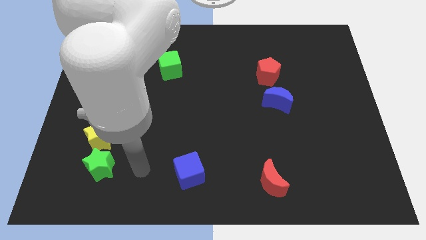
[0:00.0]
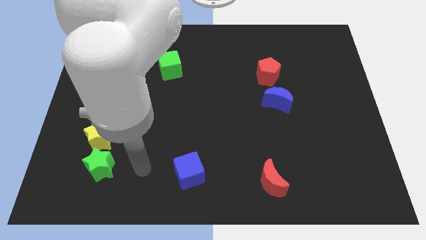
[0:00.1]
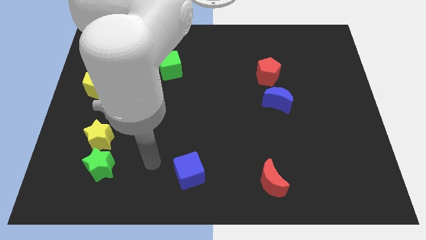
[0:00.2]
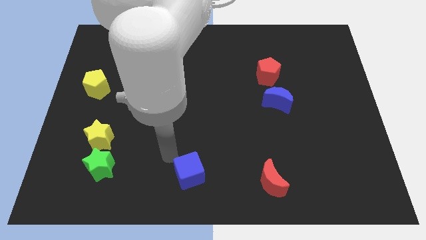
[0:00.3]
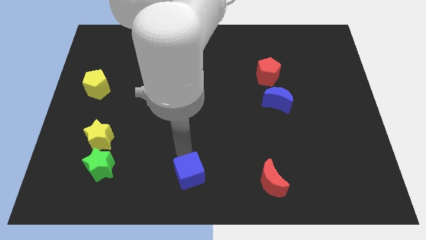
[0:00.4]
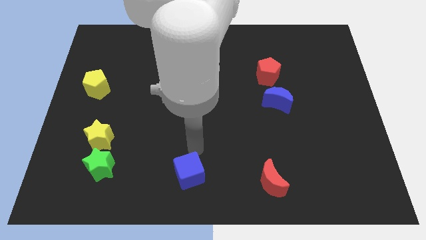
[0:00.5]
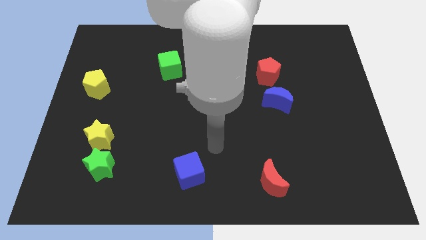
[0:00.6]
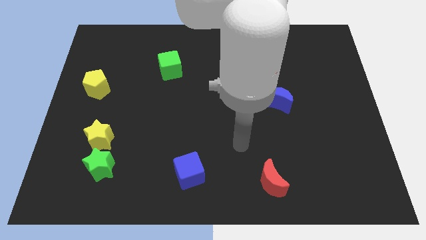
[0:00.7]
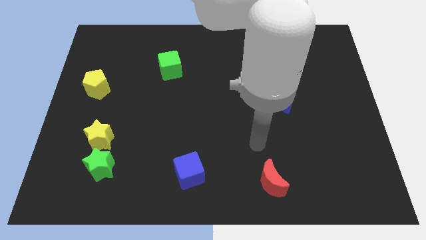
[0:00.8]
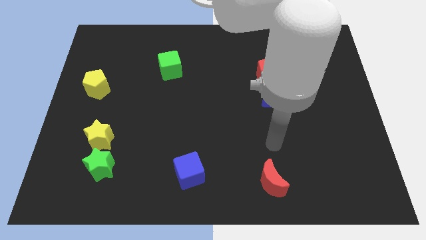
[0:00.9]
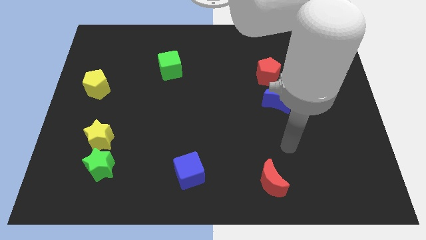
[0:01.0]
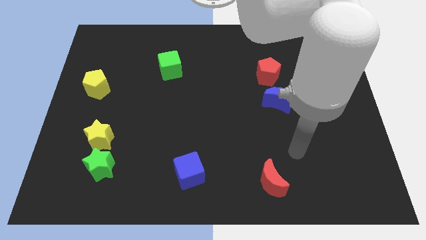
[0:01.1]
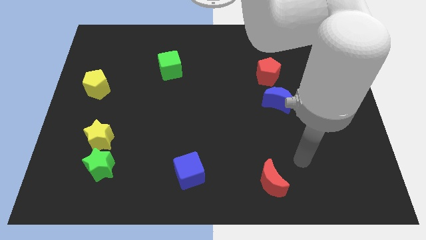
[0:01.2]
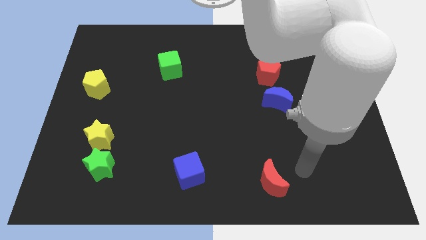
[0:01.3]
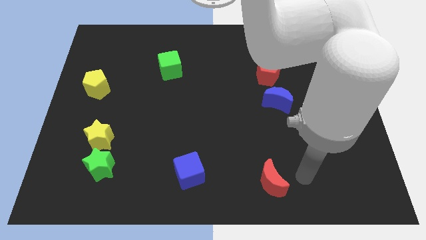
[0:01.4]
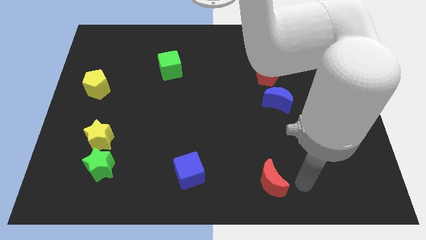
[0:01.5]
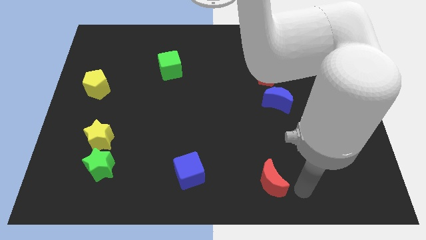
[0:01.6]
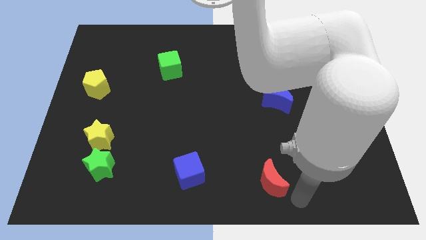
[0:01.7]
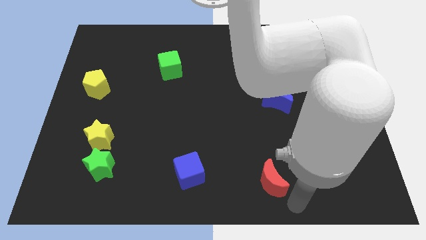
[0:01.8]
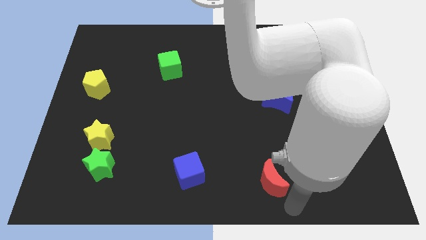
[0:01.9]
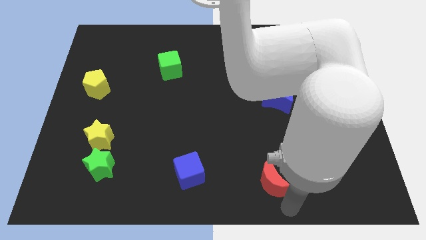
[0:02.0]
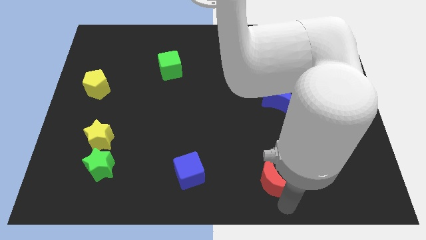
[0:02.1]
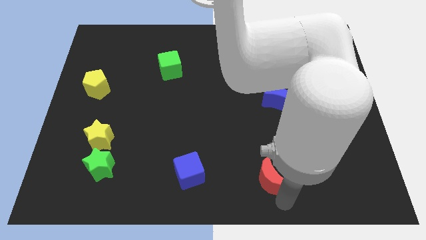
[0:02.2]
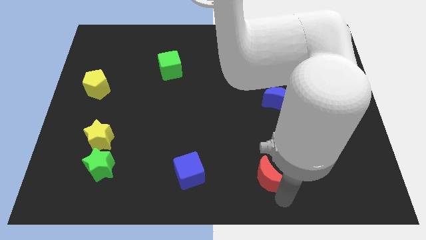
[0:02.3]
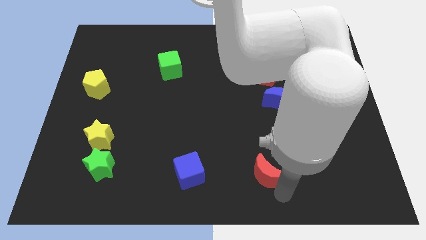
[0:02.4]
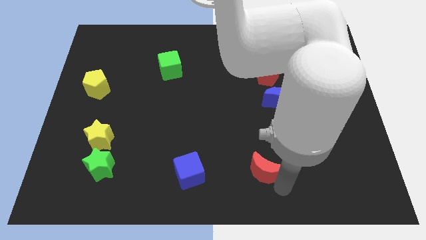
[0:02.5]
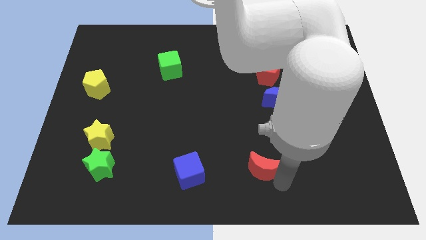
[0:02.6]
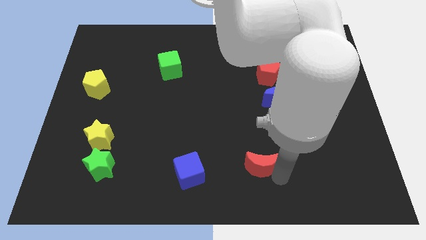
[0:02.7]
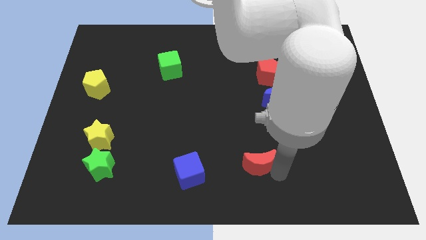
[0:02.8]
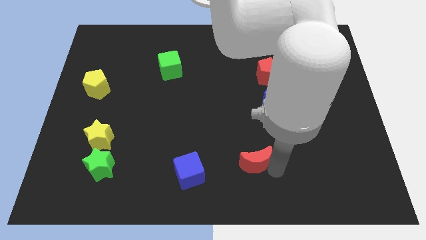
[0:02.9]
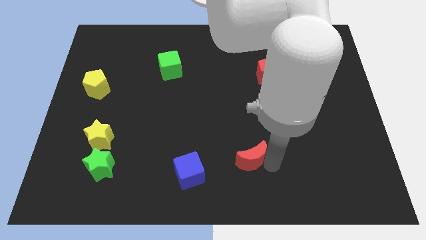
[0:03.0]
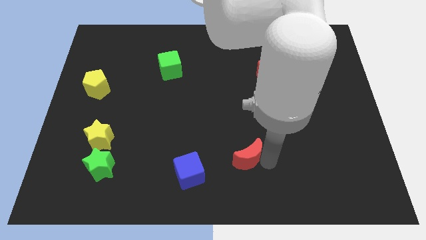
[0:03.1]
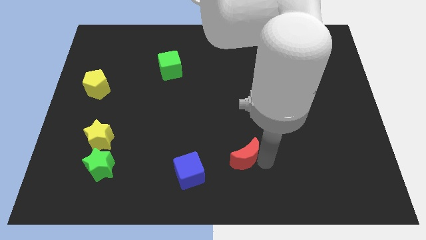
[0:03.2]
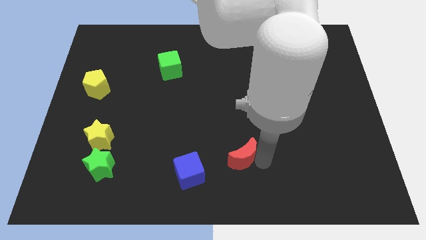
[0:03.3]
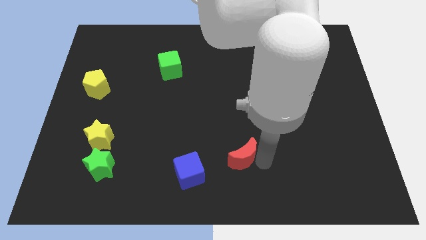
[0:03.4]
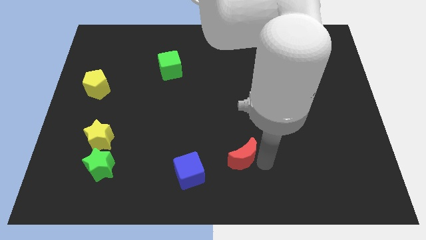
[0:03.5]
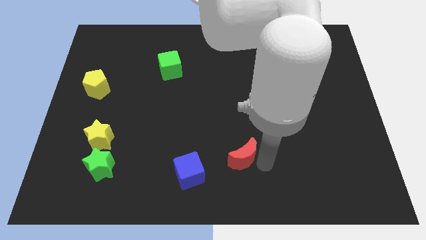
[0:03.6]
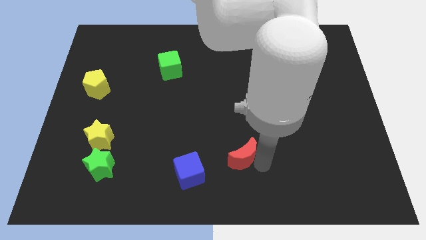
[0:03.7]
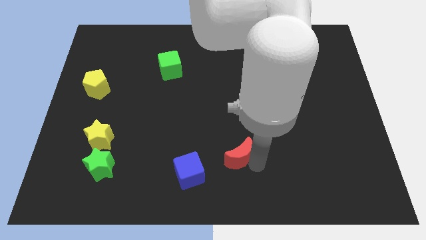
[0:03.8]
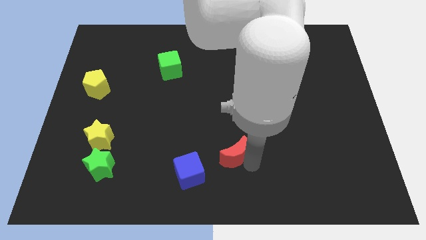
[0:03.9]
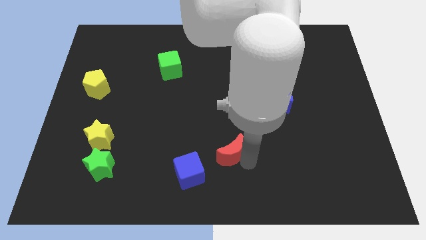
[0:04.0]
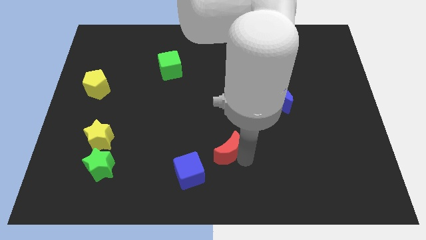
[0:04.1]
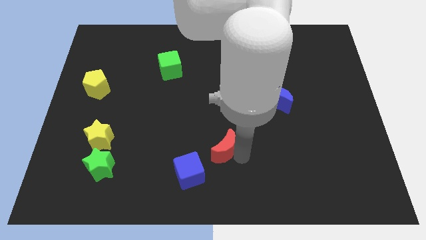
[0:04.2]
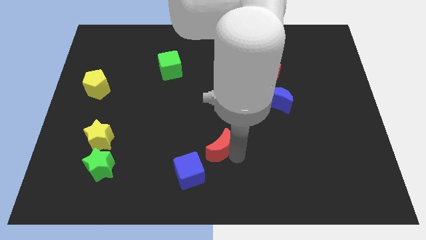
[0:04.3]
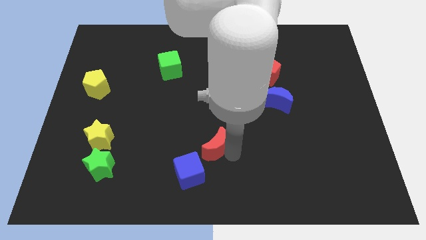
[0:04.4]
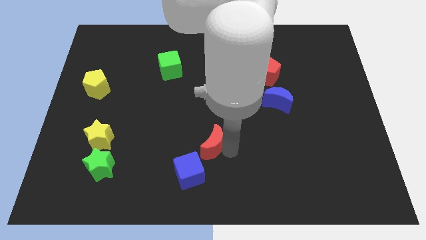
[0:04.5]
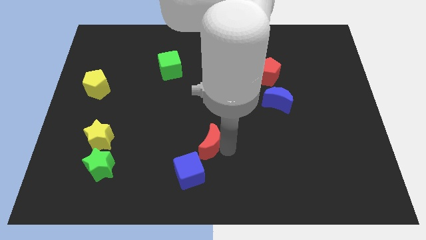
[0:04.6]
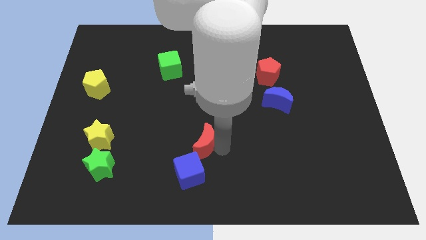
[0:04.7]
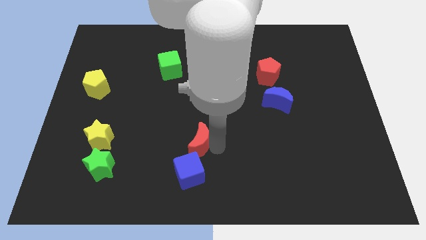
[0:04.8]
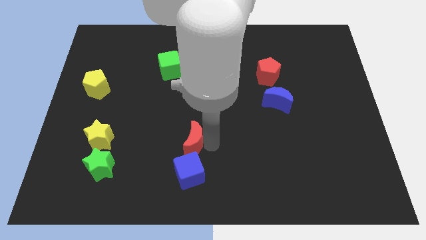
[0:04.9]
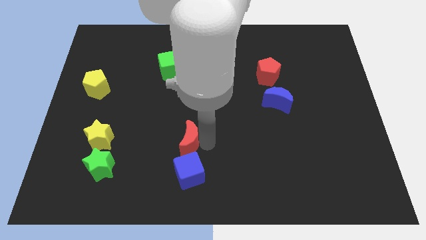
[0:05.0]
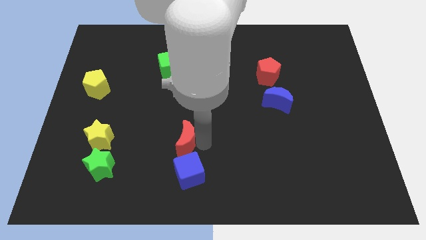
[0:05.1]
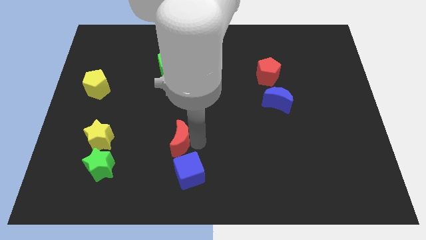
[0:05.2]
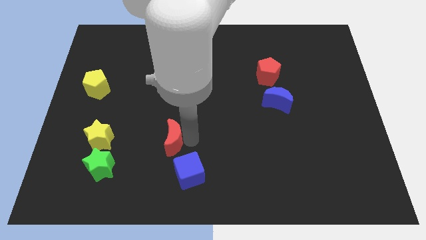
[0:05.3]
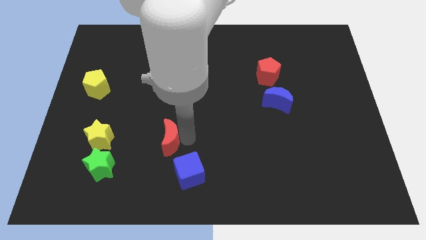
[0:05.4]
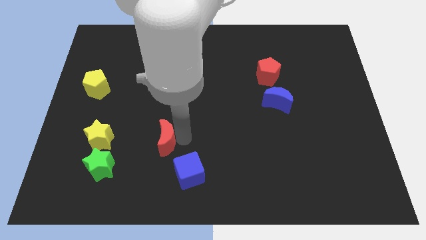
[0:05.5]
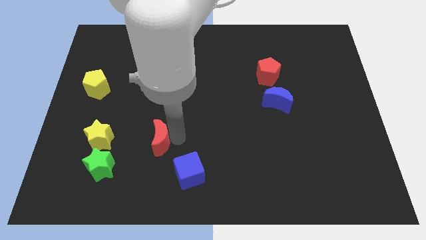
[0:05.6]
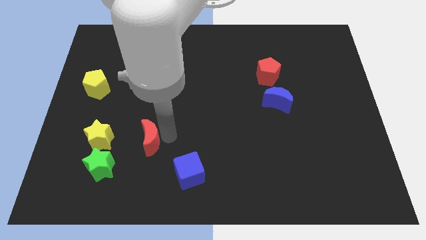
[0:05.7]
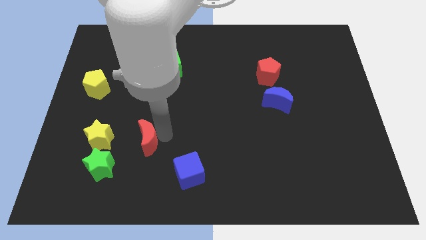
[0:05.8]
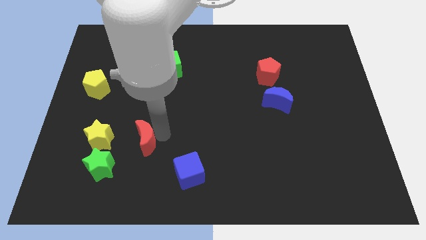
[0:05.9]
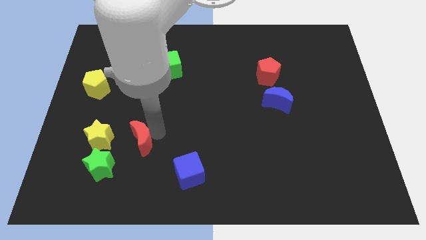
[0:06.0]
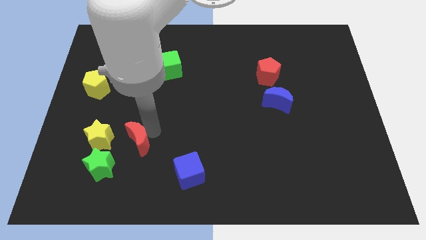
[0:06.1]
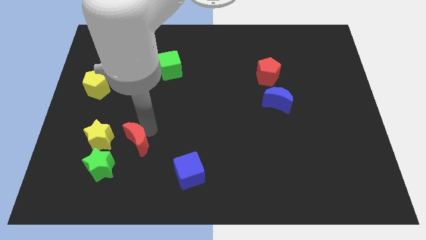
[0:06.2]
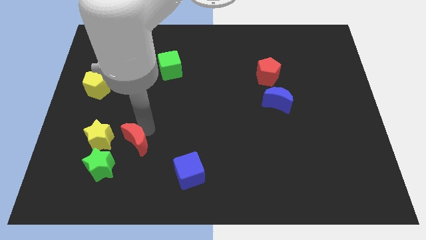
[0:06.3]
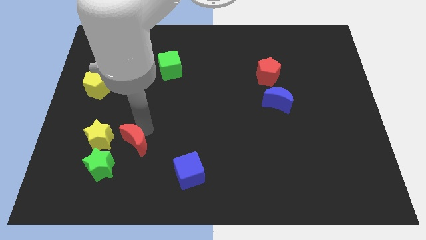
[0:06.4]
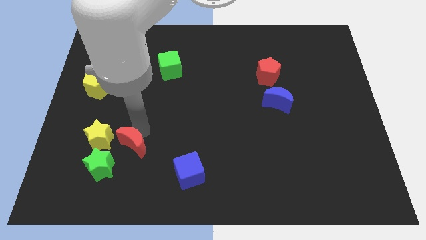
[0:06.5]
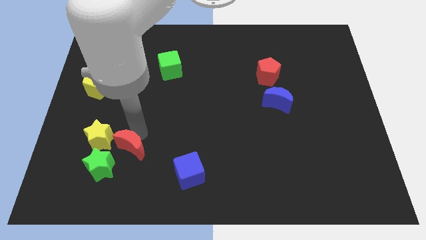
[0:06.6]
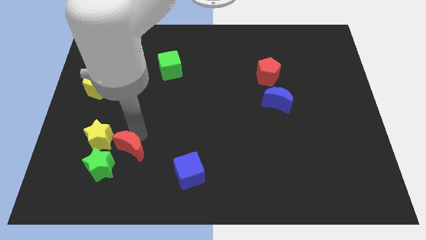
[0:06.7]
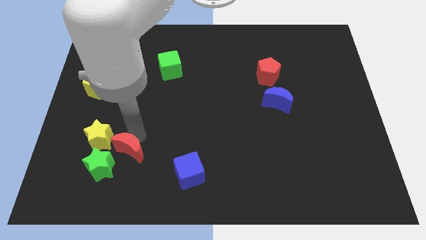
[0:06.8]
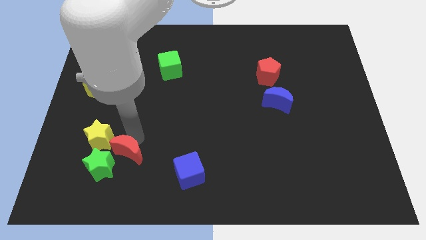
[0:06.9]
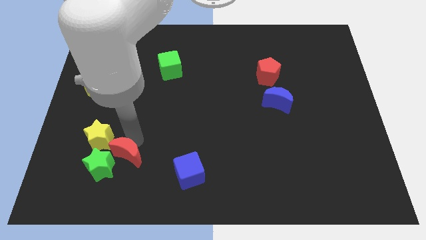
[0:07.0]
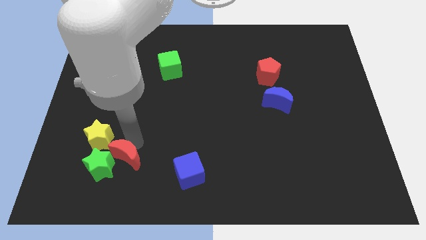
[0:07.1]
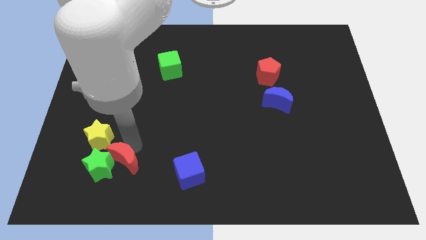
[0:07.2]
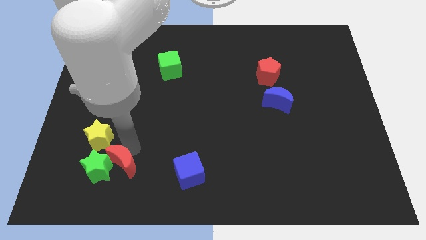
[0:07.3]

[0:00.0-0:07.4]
put the red moon next to the green star

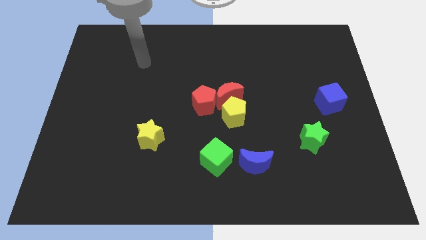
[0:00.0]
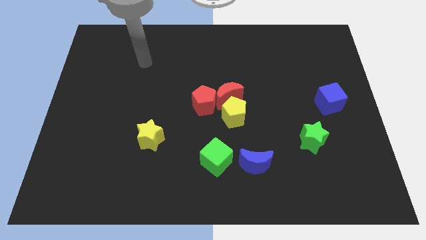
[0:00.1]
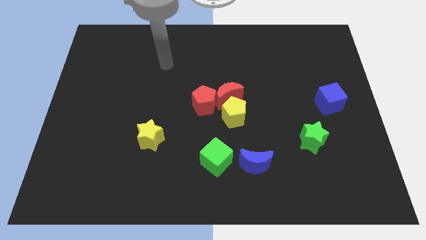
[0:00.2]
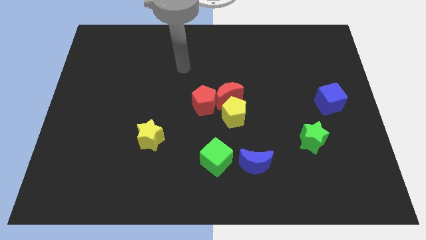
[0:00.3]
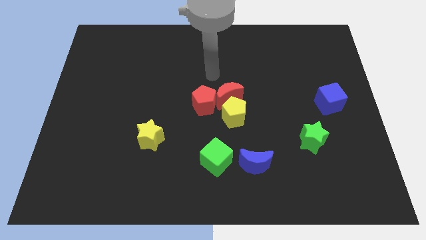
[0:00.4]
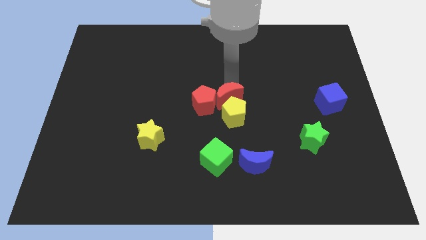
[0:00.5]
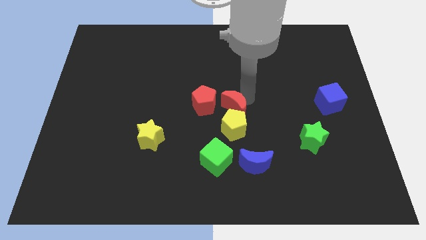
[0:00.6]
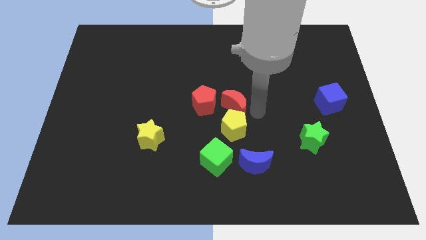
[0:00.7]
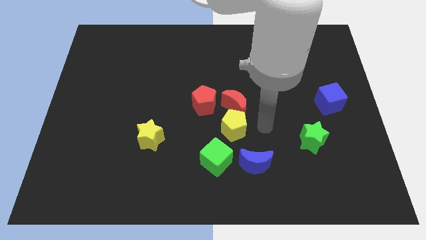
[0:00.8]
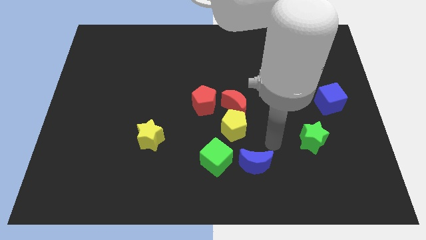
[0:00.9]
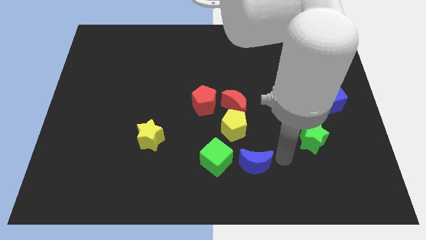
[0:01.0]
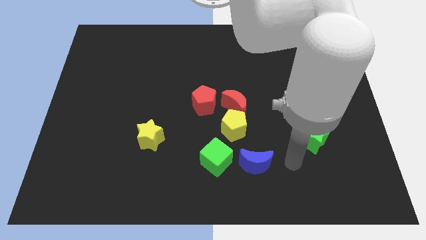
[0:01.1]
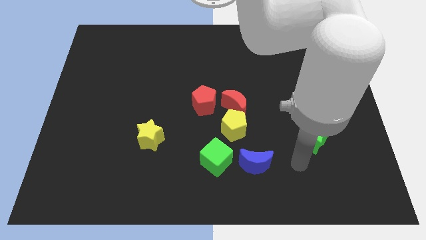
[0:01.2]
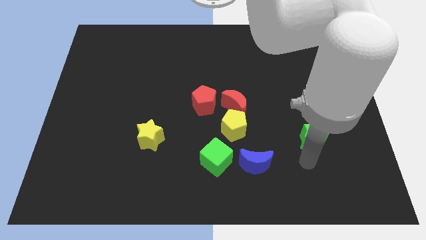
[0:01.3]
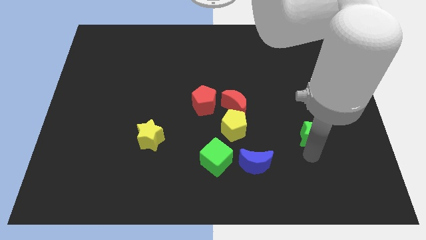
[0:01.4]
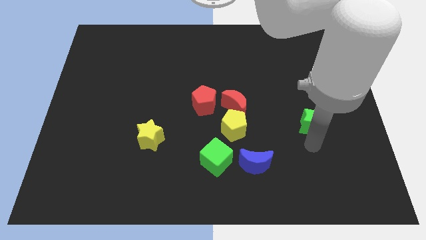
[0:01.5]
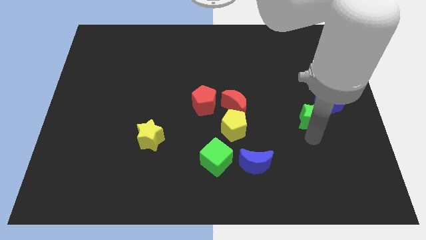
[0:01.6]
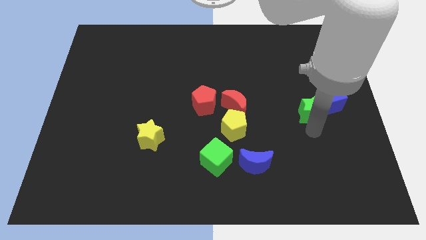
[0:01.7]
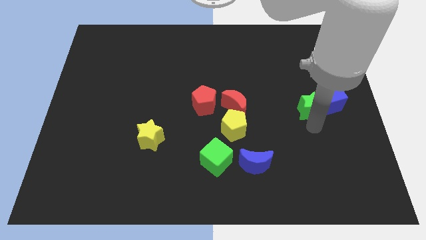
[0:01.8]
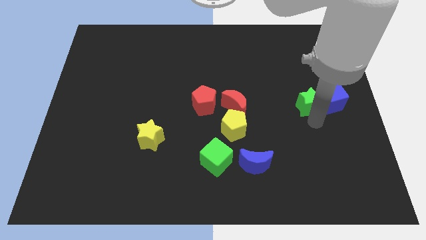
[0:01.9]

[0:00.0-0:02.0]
push the green star to the blue cube
